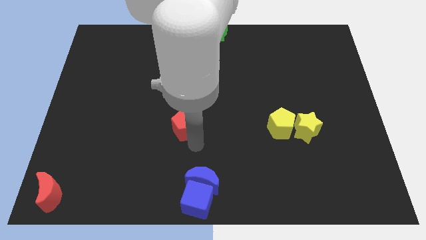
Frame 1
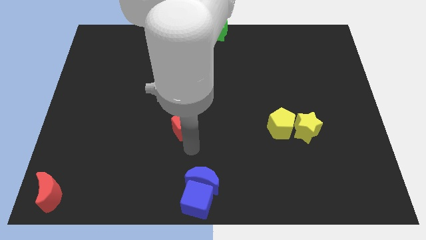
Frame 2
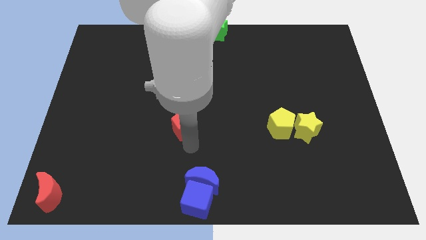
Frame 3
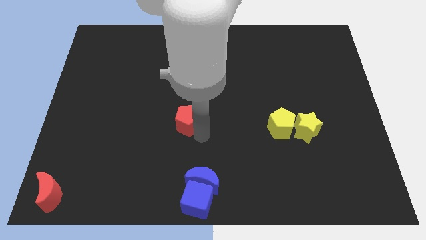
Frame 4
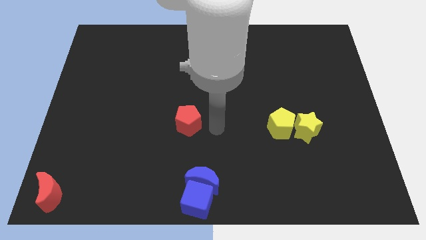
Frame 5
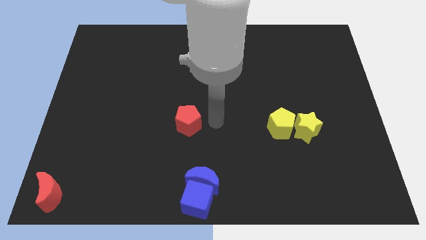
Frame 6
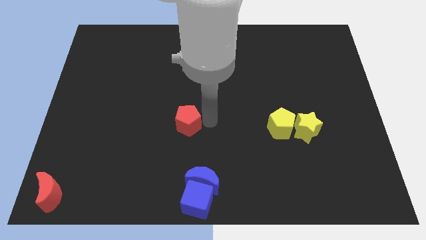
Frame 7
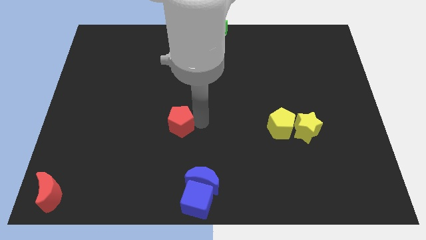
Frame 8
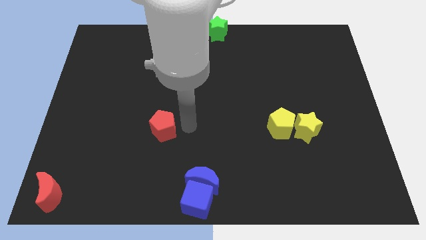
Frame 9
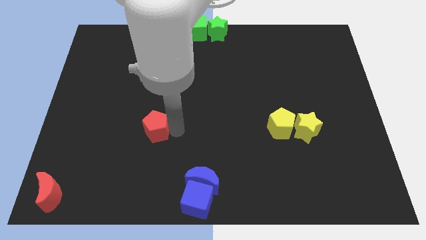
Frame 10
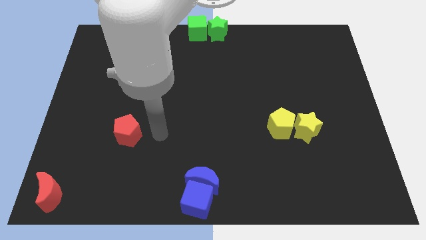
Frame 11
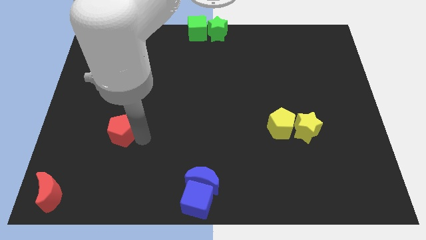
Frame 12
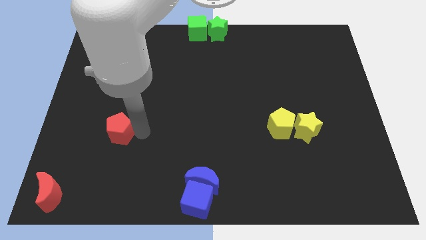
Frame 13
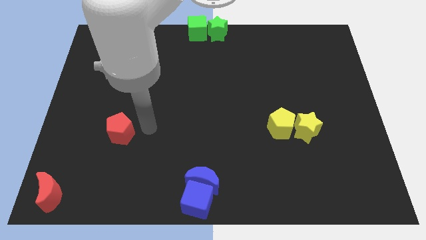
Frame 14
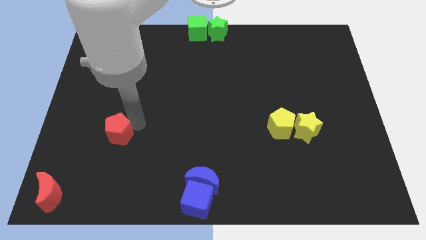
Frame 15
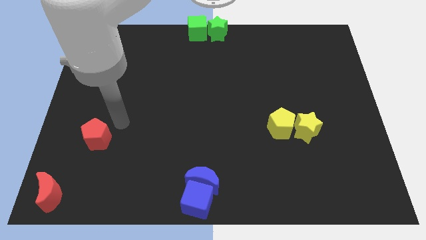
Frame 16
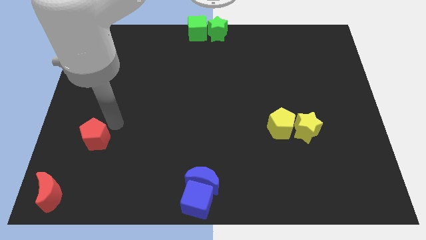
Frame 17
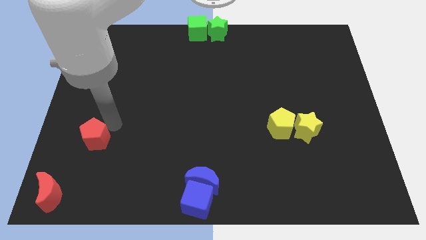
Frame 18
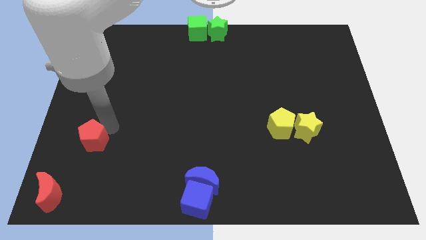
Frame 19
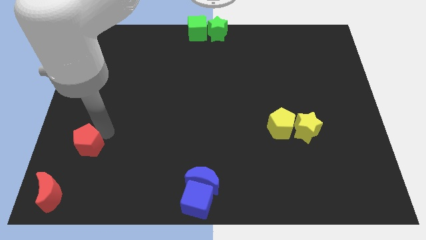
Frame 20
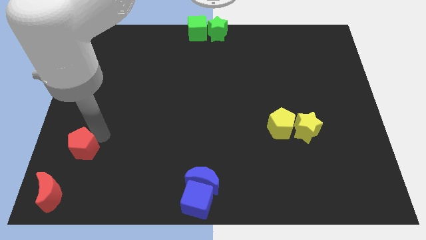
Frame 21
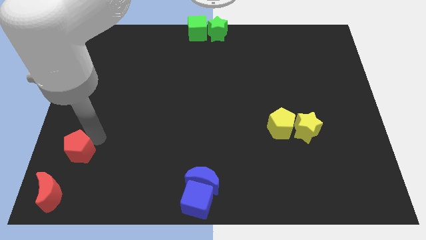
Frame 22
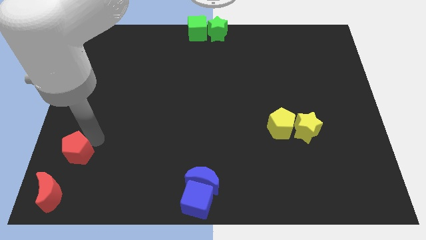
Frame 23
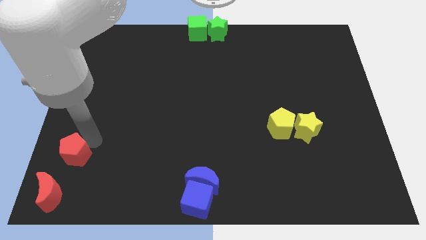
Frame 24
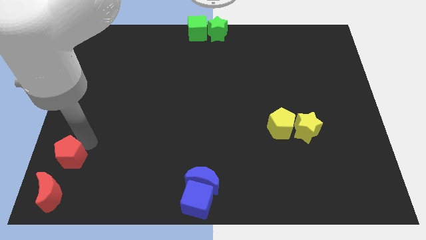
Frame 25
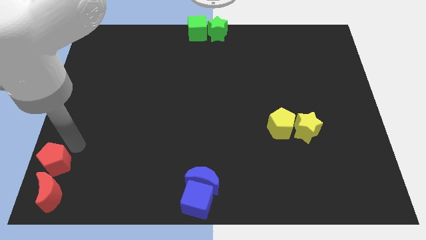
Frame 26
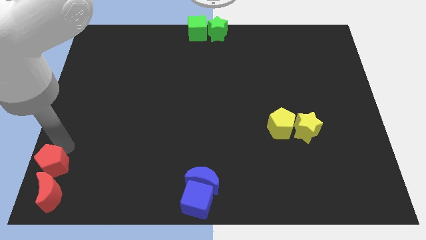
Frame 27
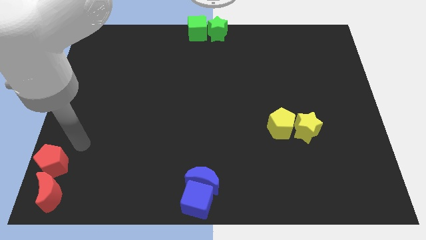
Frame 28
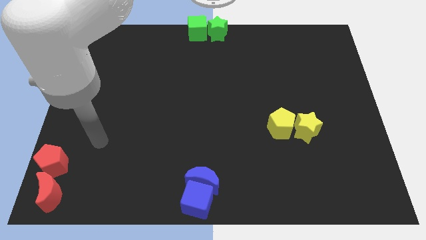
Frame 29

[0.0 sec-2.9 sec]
place red pentagon above red crescent

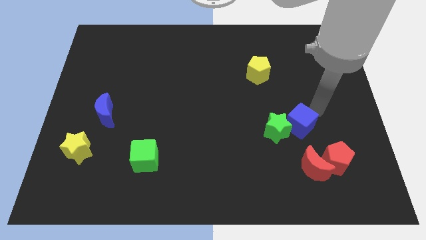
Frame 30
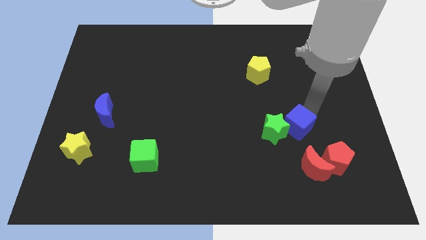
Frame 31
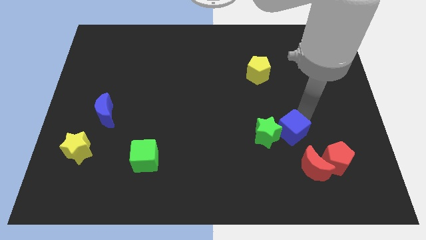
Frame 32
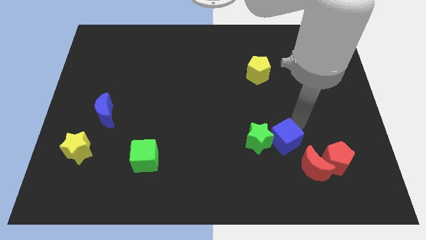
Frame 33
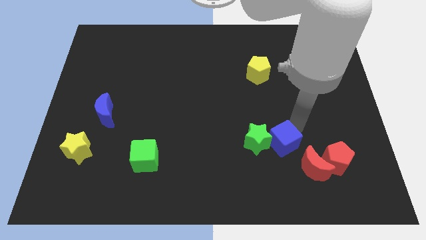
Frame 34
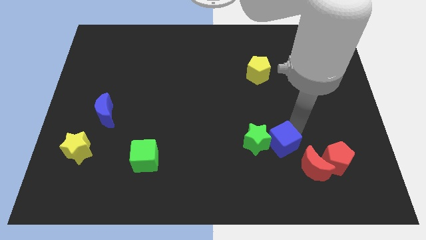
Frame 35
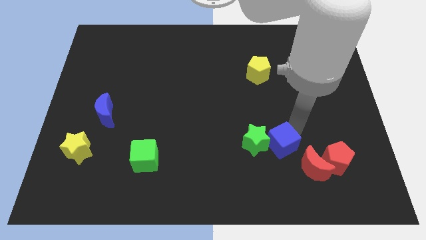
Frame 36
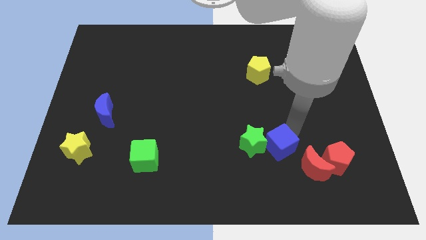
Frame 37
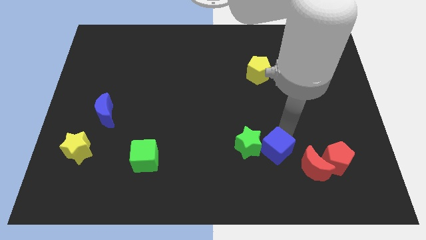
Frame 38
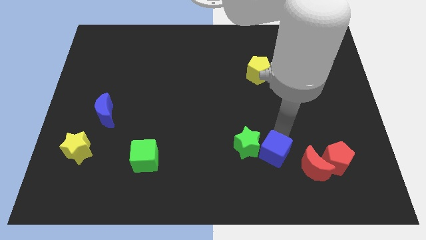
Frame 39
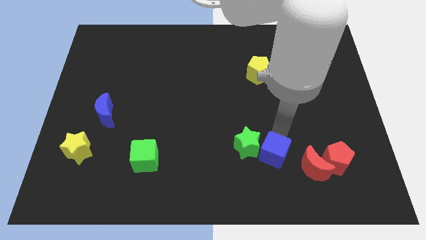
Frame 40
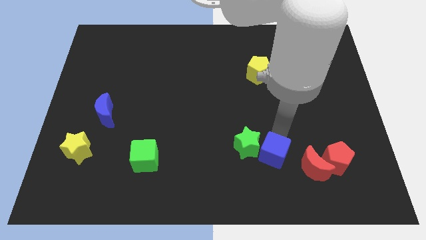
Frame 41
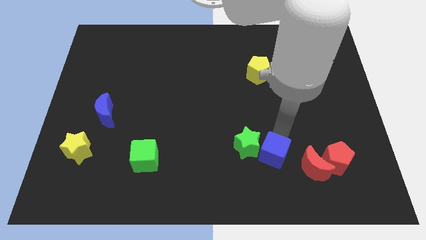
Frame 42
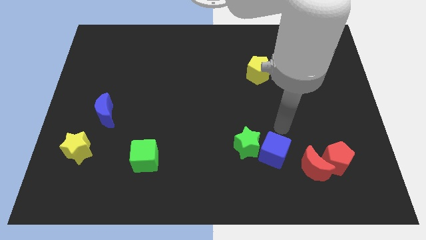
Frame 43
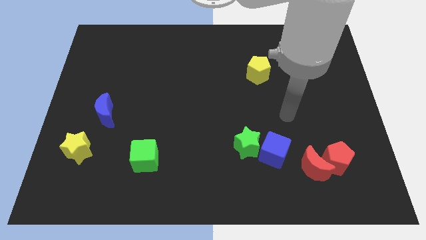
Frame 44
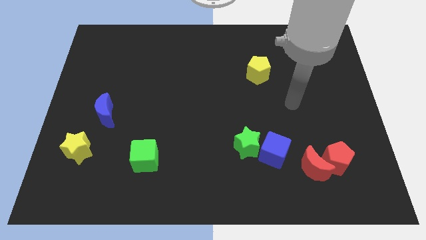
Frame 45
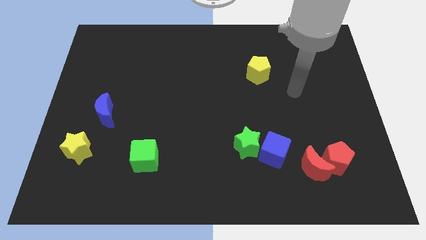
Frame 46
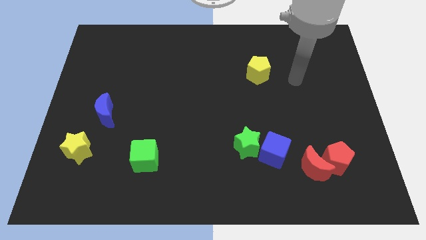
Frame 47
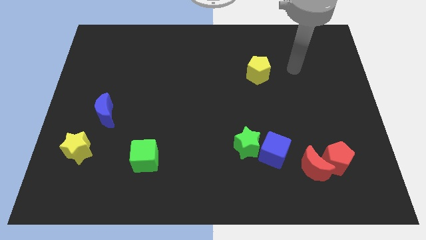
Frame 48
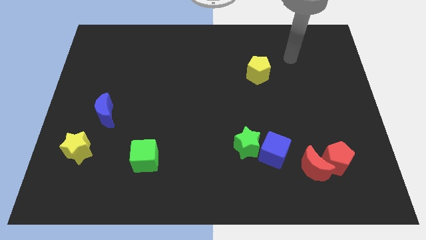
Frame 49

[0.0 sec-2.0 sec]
move the green star and blue cube to the bottom center

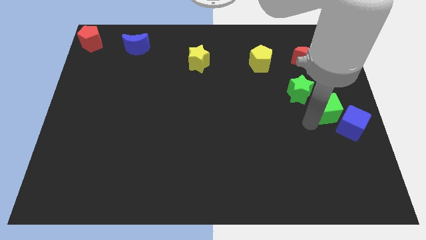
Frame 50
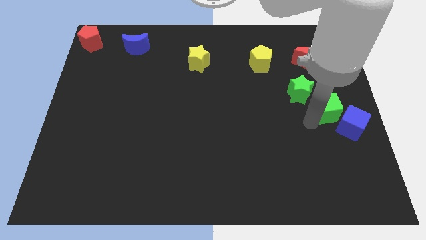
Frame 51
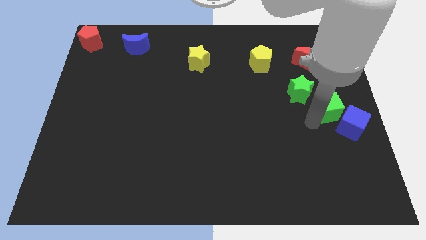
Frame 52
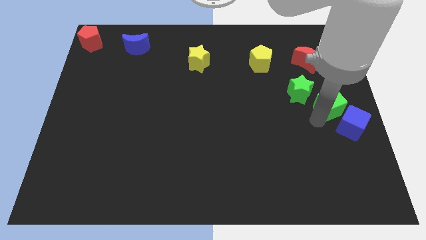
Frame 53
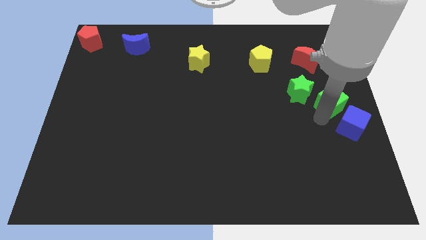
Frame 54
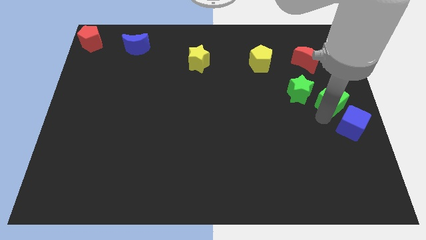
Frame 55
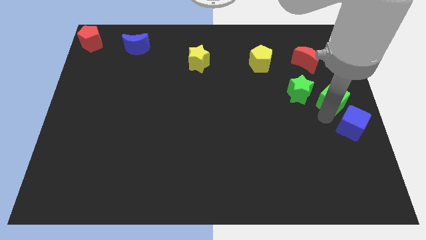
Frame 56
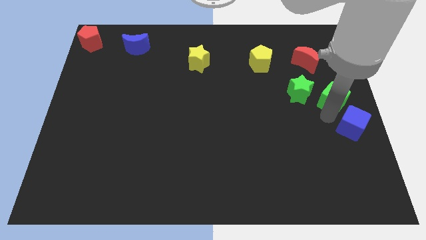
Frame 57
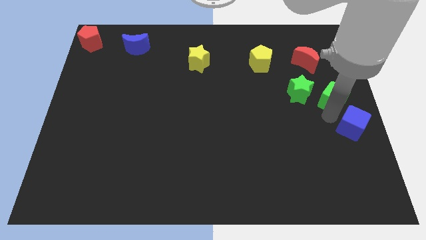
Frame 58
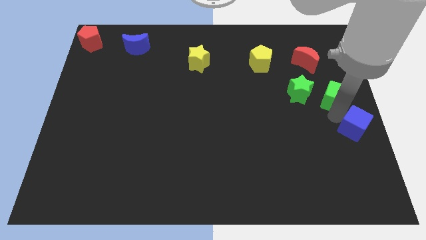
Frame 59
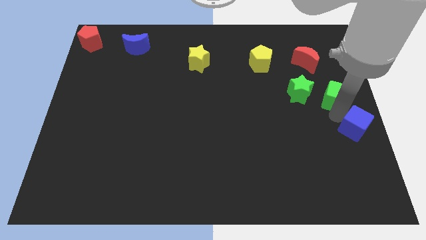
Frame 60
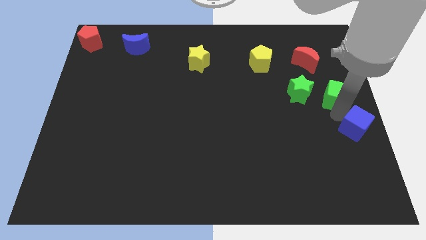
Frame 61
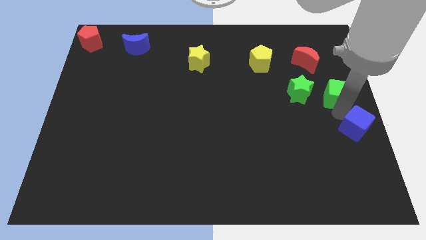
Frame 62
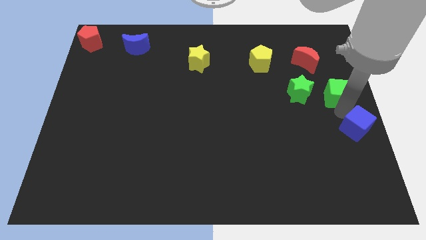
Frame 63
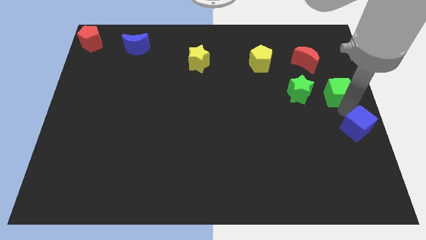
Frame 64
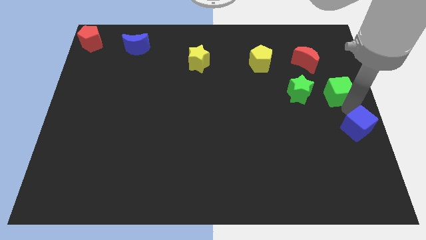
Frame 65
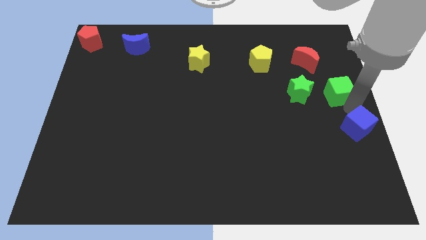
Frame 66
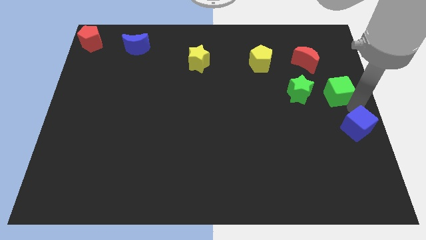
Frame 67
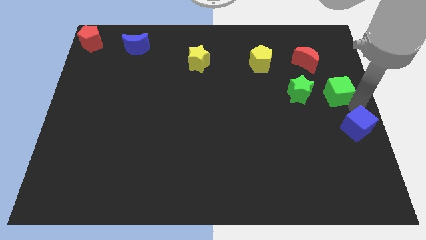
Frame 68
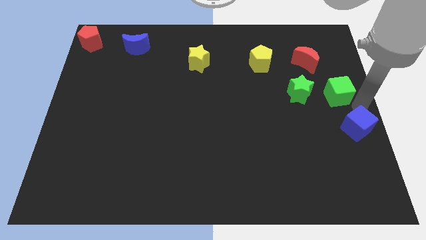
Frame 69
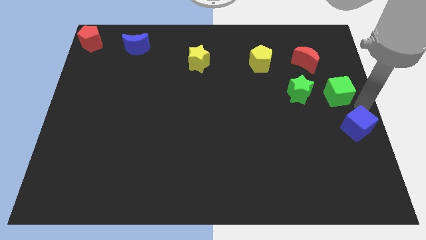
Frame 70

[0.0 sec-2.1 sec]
move the green cube to the right side of the green star

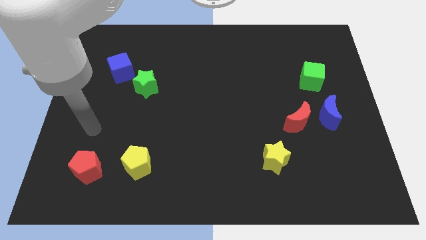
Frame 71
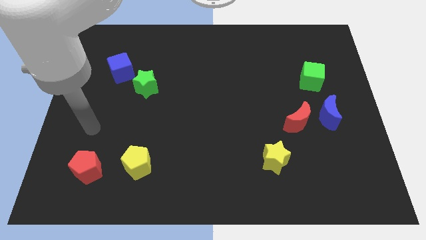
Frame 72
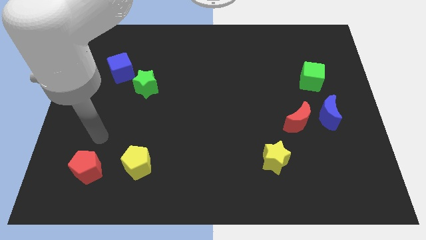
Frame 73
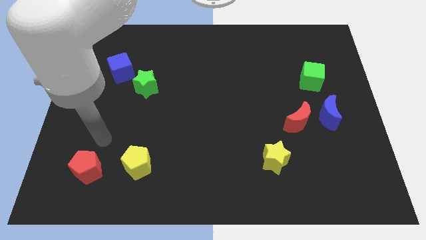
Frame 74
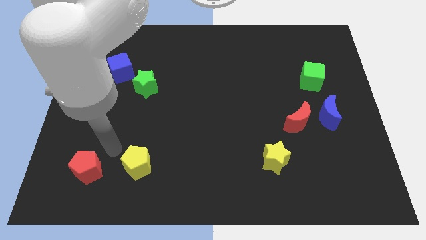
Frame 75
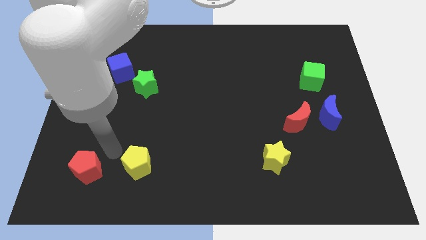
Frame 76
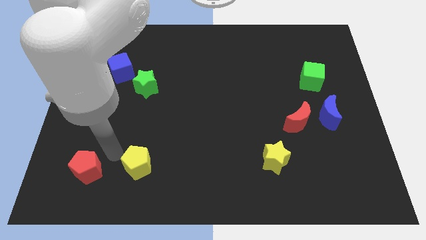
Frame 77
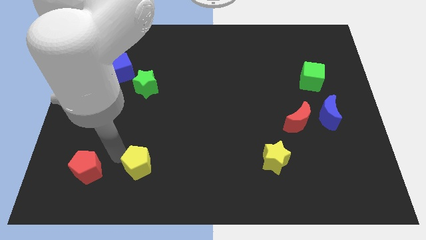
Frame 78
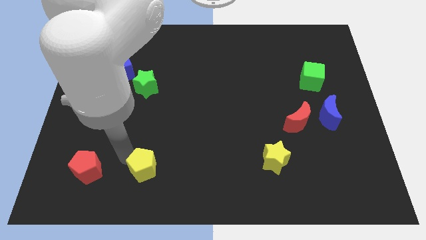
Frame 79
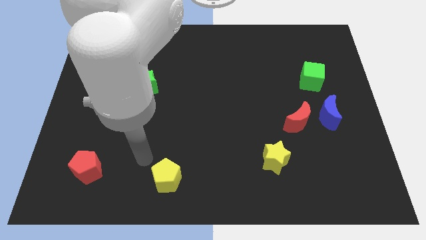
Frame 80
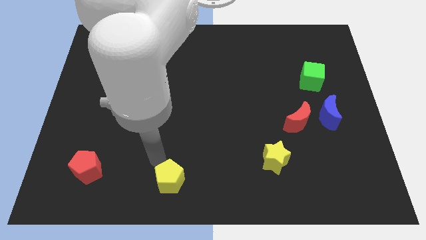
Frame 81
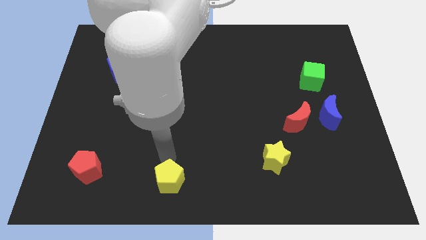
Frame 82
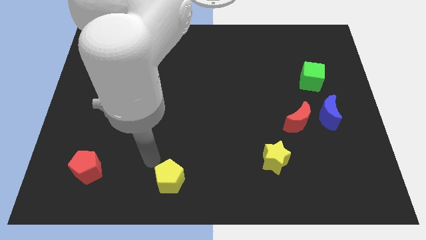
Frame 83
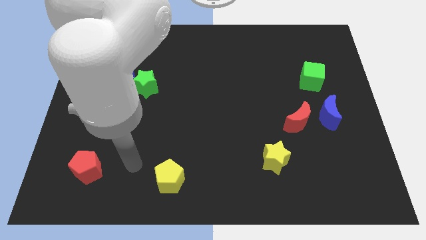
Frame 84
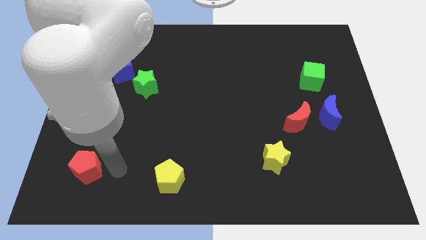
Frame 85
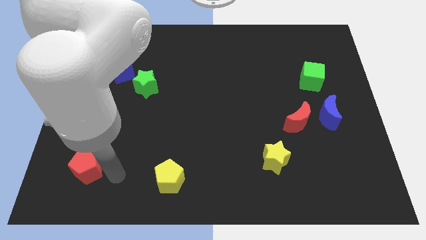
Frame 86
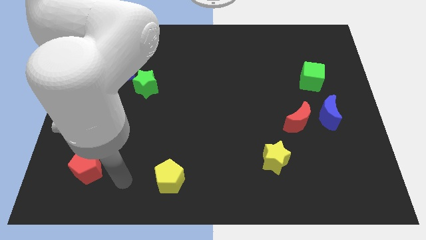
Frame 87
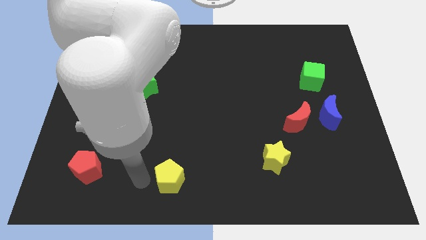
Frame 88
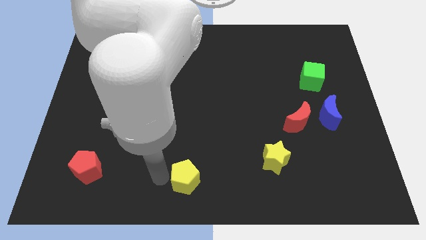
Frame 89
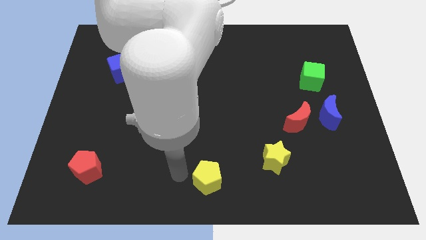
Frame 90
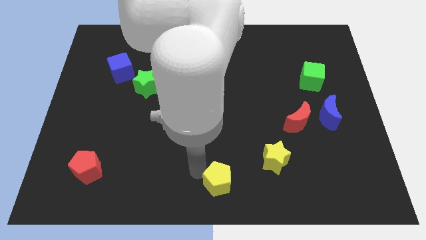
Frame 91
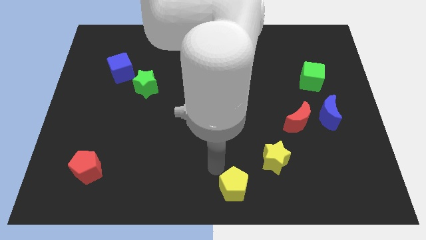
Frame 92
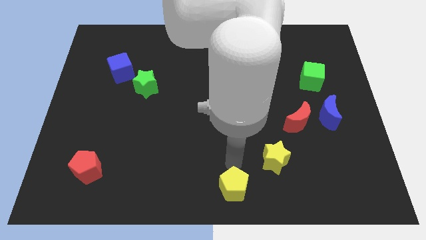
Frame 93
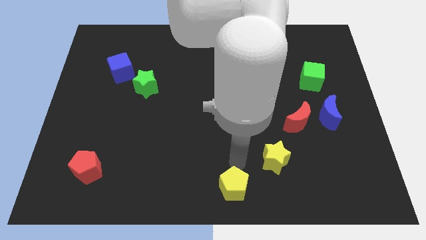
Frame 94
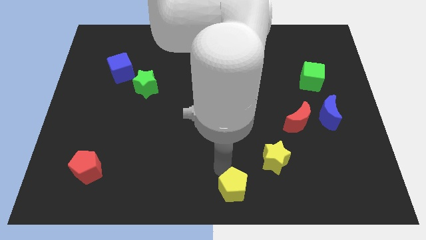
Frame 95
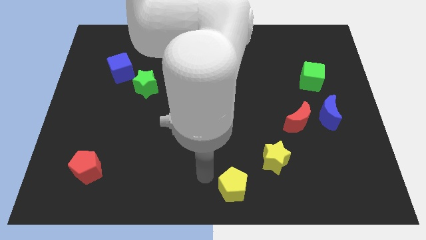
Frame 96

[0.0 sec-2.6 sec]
place the yellow pentagon diagonally to the yellow sttar
